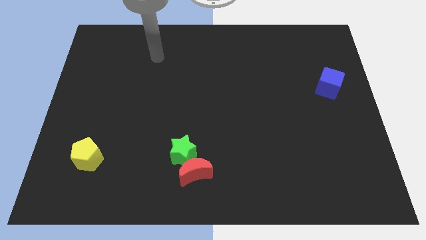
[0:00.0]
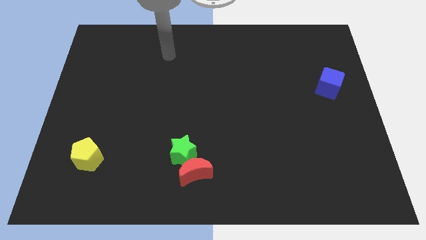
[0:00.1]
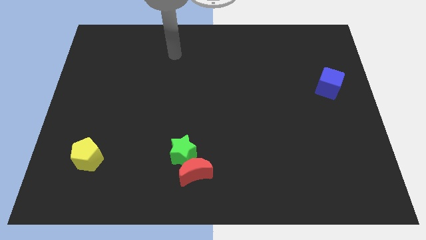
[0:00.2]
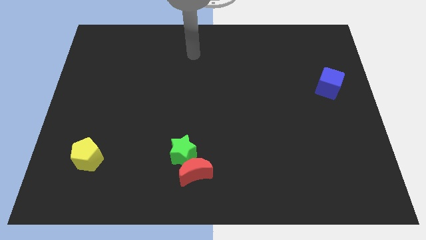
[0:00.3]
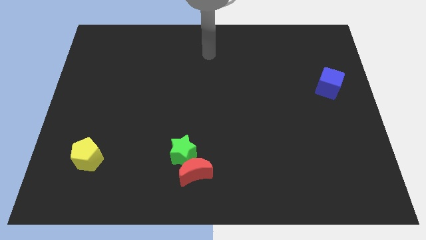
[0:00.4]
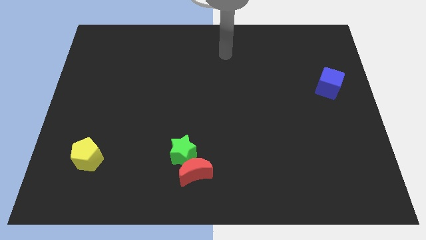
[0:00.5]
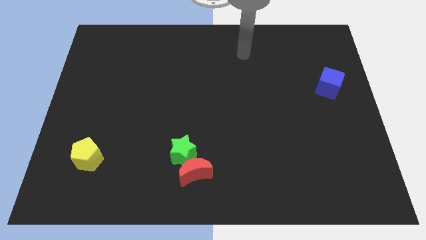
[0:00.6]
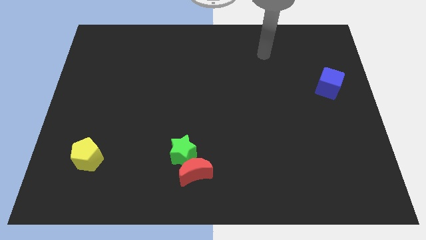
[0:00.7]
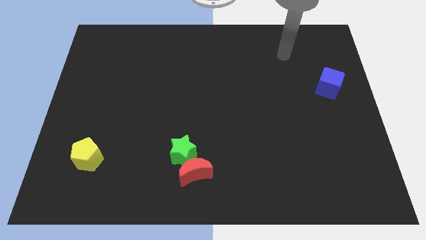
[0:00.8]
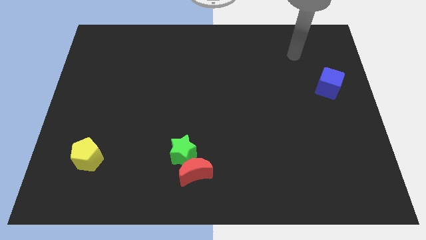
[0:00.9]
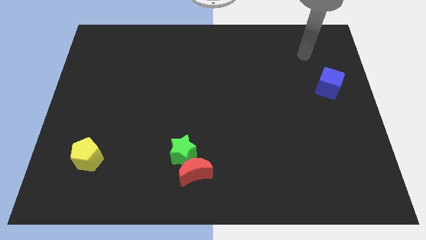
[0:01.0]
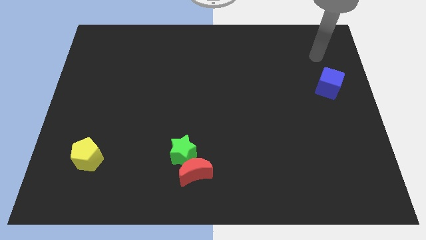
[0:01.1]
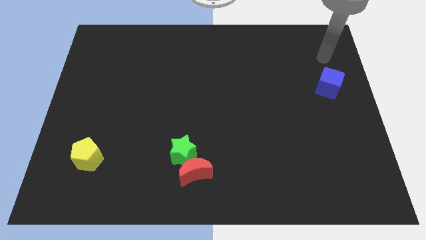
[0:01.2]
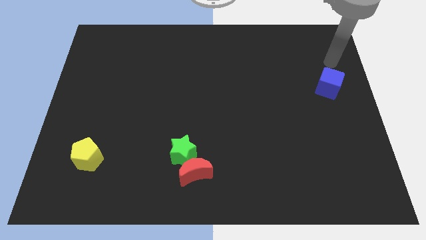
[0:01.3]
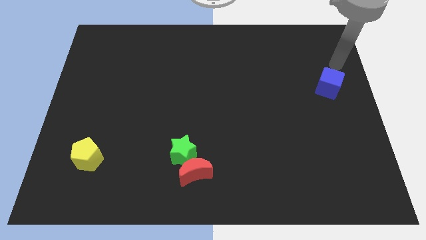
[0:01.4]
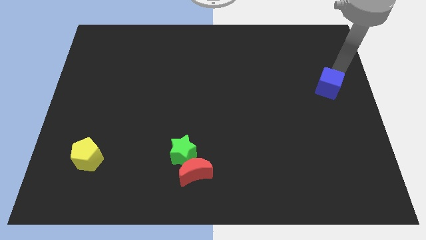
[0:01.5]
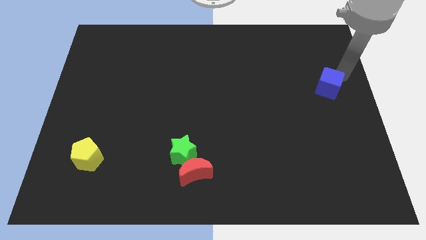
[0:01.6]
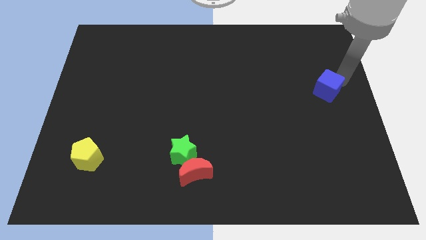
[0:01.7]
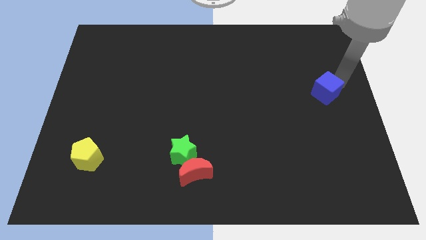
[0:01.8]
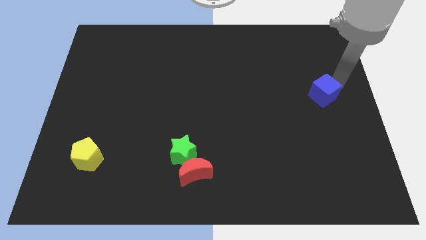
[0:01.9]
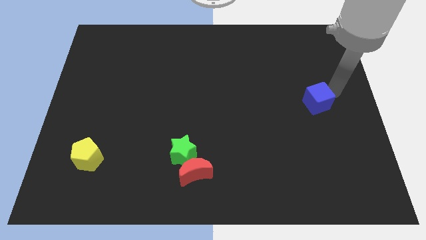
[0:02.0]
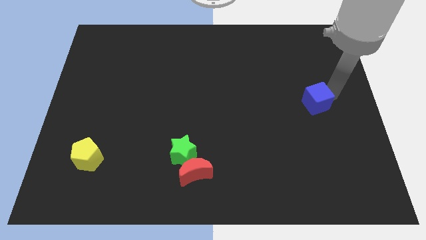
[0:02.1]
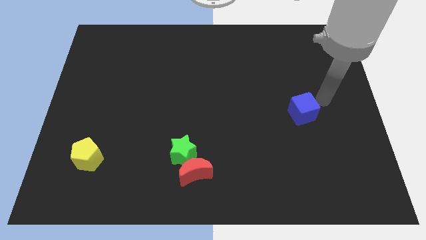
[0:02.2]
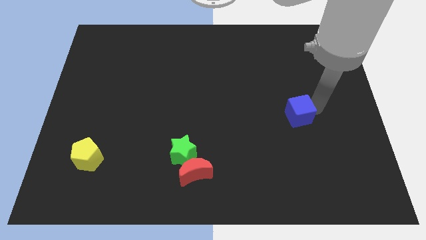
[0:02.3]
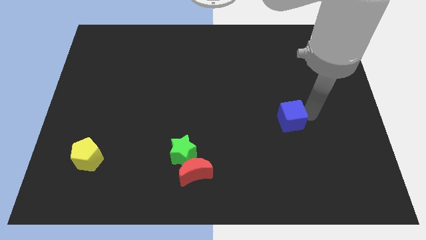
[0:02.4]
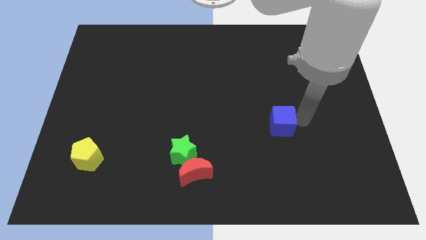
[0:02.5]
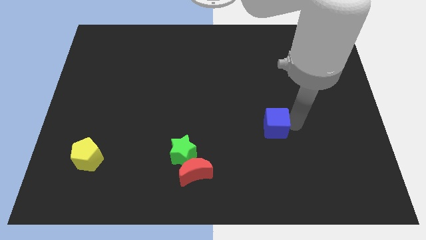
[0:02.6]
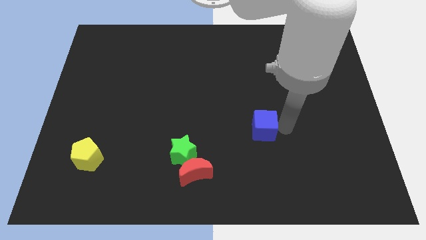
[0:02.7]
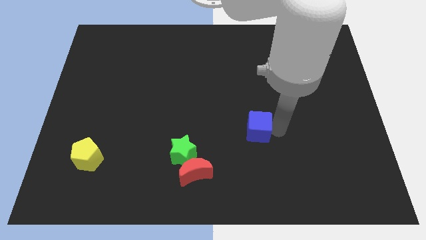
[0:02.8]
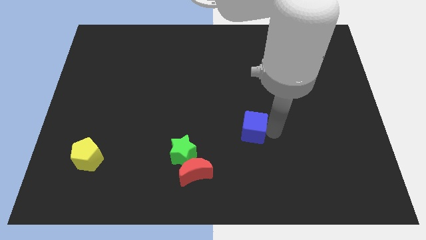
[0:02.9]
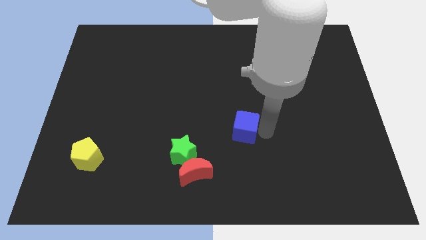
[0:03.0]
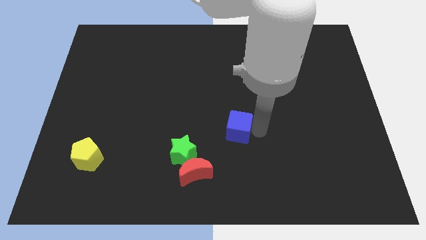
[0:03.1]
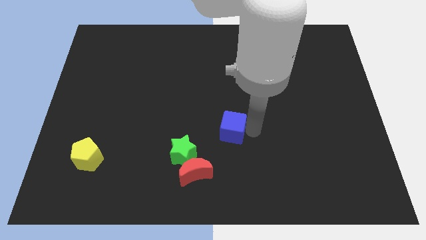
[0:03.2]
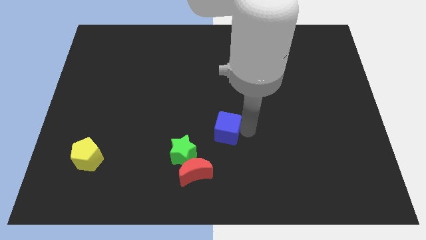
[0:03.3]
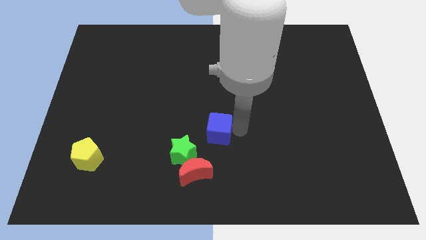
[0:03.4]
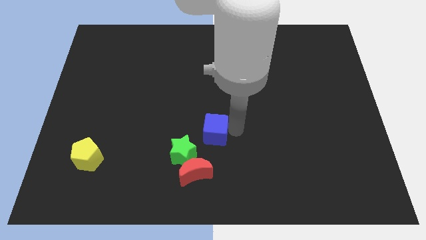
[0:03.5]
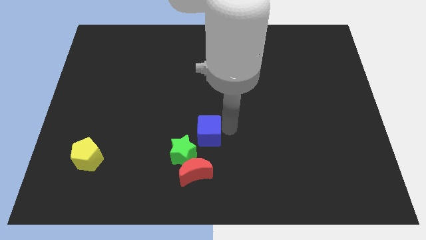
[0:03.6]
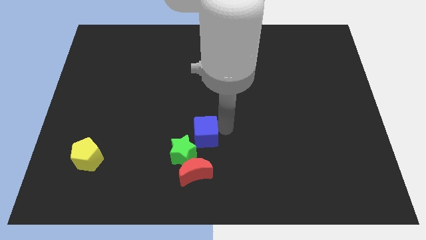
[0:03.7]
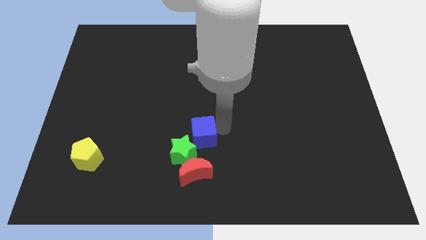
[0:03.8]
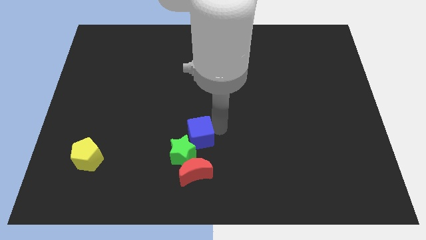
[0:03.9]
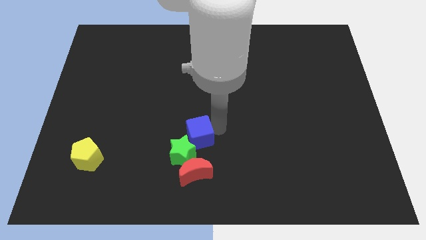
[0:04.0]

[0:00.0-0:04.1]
move the blue block close to the green star

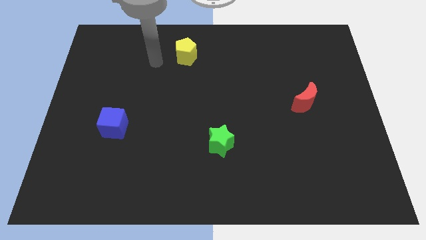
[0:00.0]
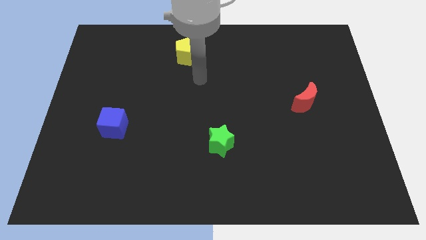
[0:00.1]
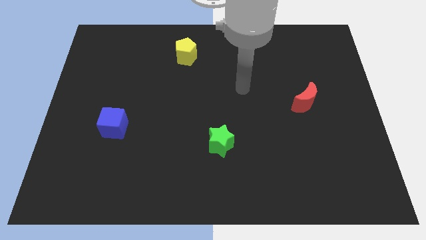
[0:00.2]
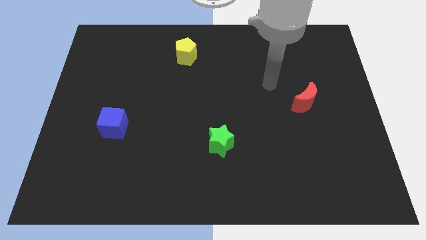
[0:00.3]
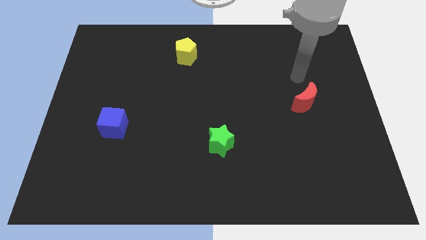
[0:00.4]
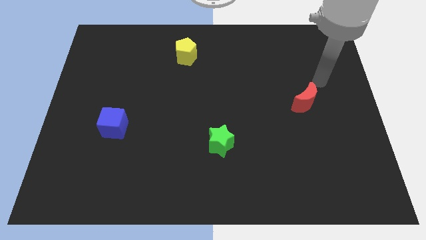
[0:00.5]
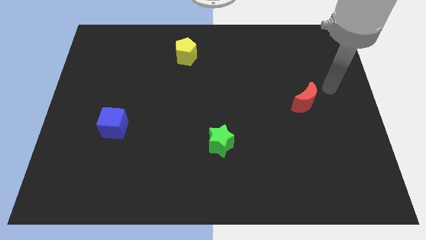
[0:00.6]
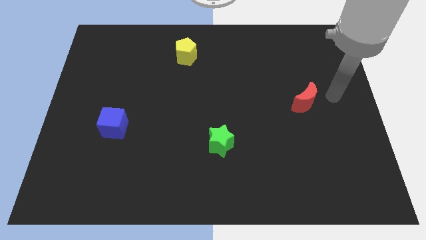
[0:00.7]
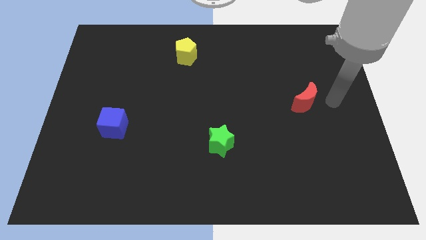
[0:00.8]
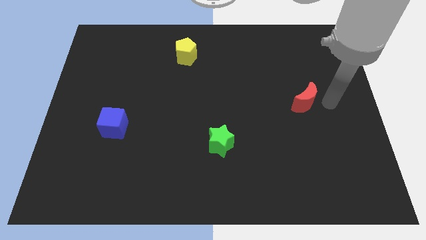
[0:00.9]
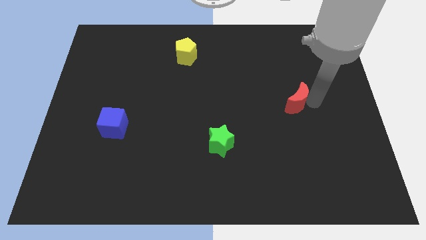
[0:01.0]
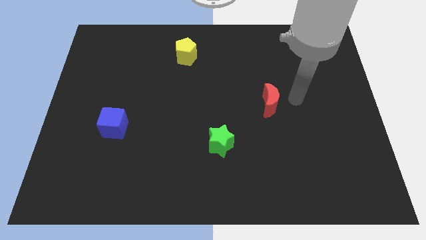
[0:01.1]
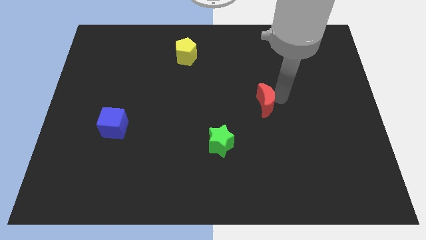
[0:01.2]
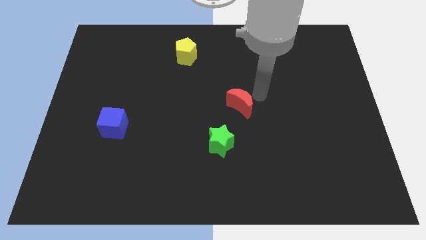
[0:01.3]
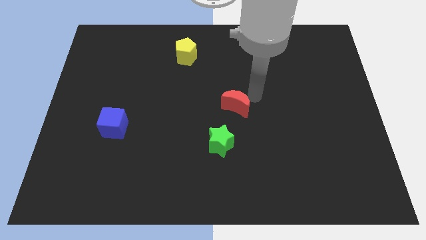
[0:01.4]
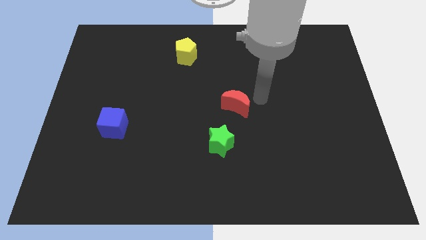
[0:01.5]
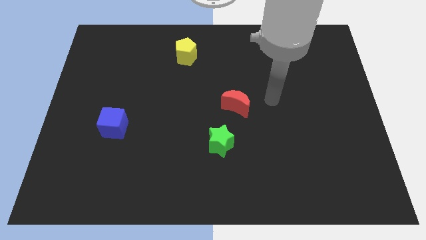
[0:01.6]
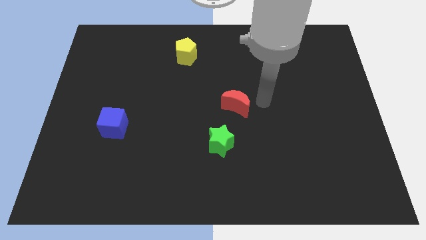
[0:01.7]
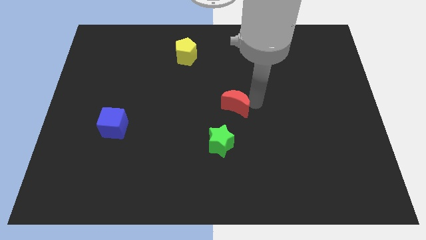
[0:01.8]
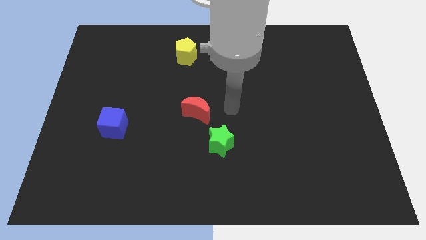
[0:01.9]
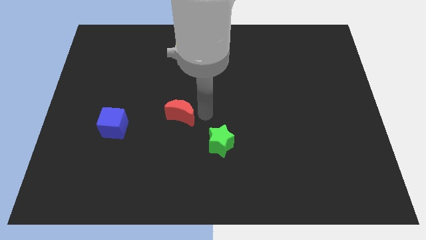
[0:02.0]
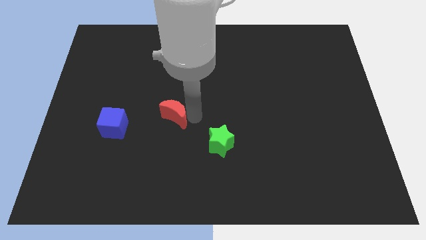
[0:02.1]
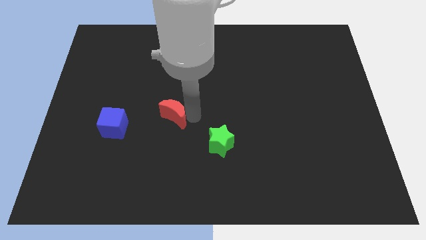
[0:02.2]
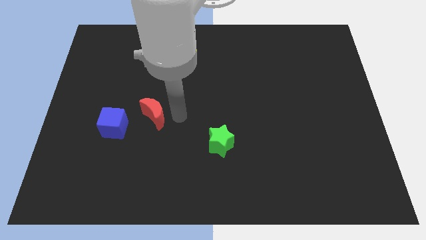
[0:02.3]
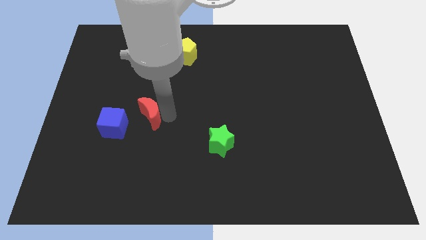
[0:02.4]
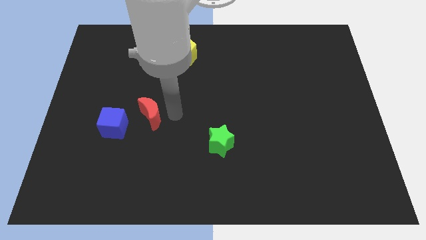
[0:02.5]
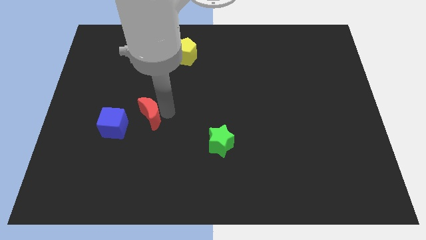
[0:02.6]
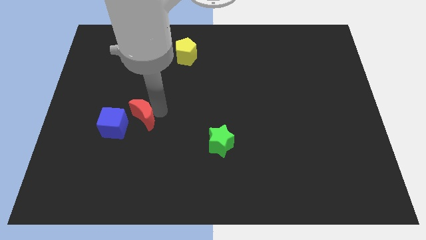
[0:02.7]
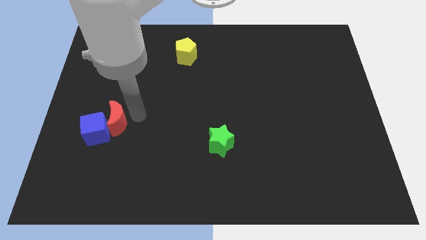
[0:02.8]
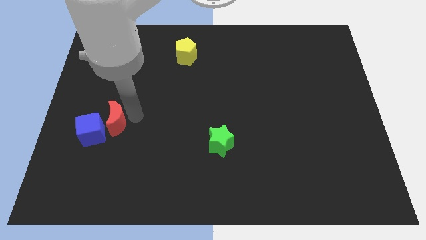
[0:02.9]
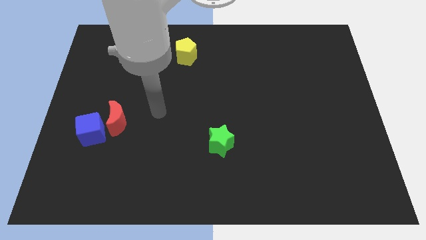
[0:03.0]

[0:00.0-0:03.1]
move the red moon towards the cube

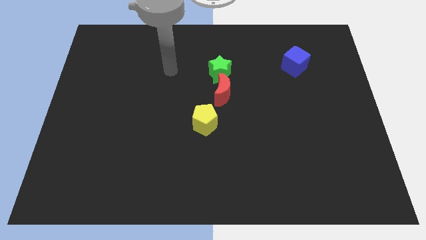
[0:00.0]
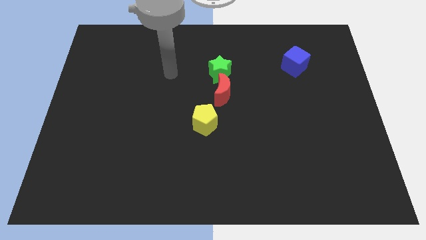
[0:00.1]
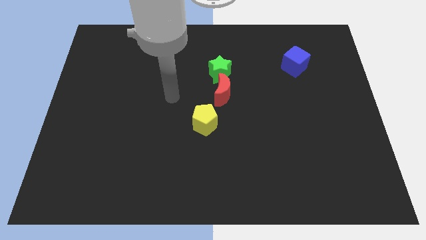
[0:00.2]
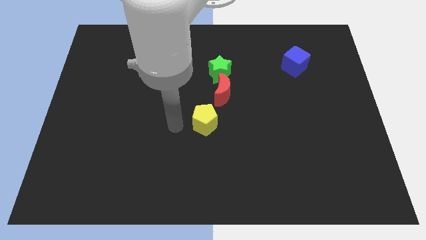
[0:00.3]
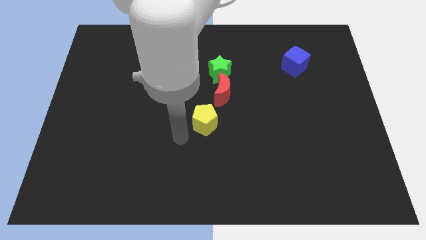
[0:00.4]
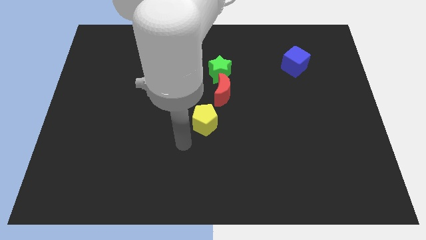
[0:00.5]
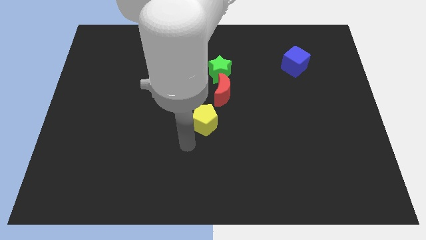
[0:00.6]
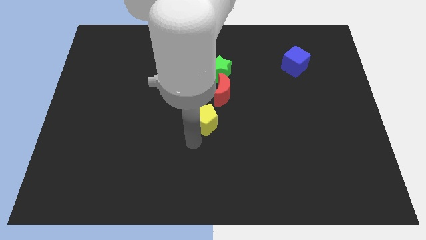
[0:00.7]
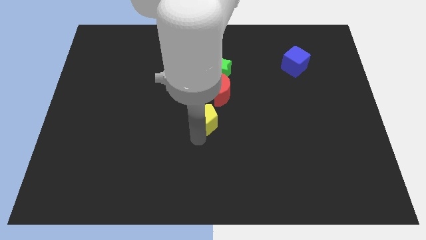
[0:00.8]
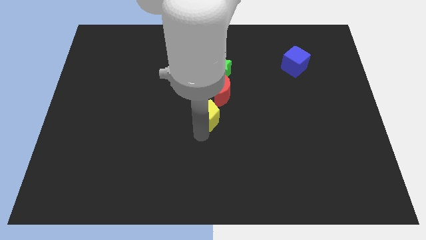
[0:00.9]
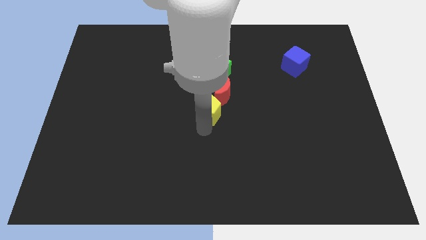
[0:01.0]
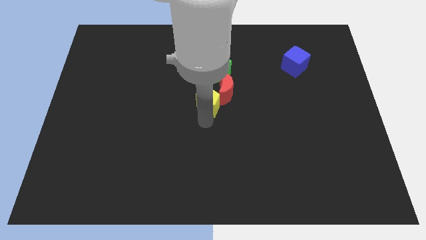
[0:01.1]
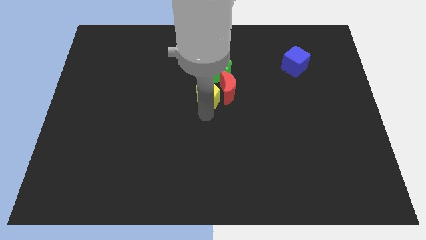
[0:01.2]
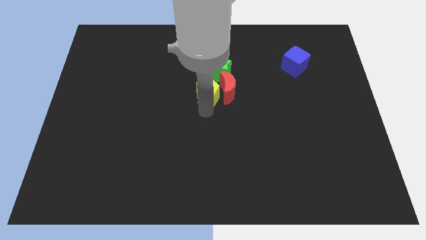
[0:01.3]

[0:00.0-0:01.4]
slide the yellow block to the moon

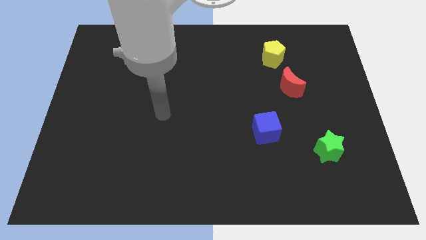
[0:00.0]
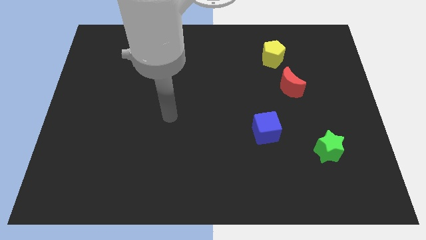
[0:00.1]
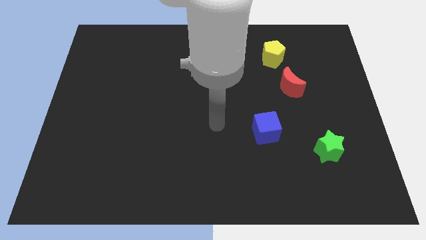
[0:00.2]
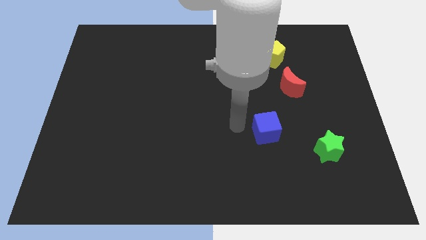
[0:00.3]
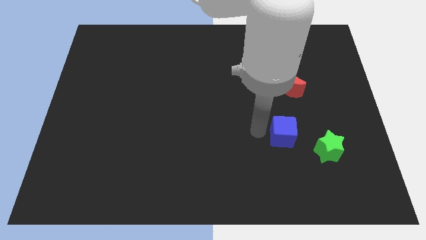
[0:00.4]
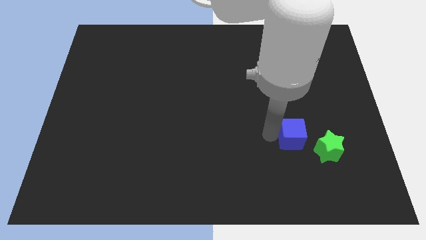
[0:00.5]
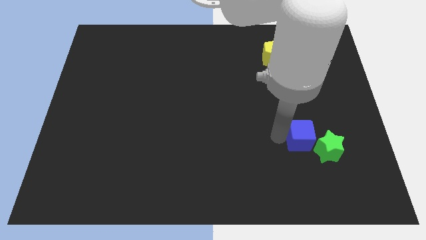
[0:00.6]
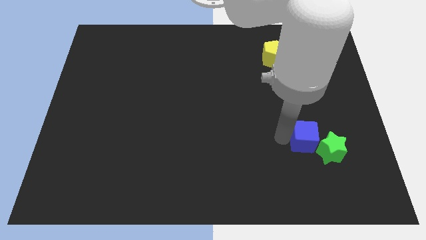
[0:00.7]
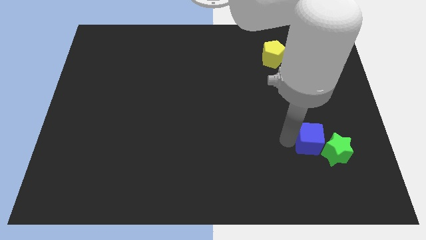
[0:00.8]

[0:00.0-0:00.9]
move the blue cube towards the green block
